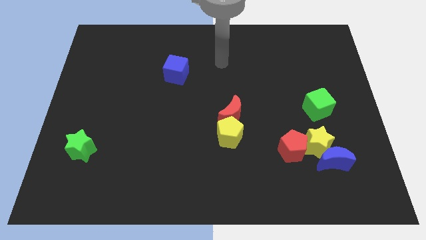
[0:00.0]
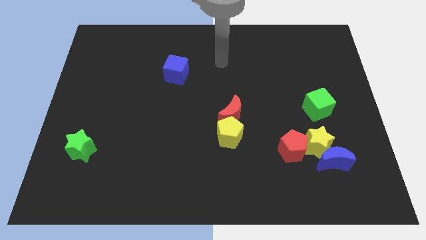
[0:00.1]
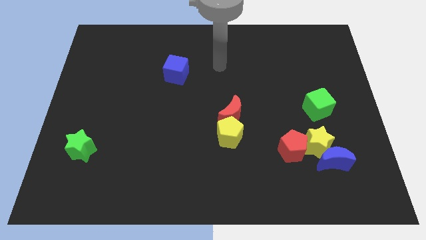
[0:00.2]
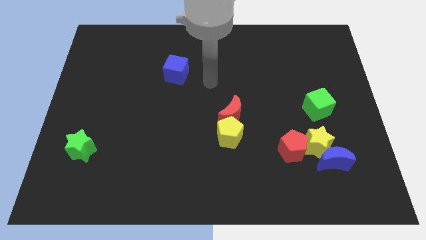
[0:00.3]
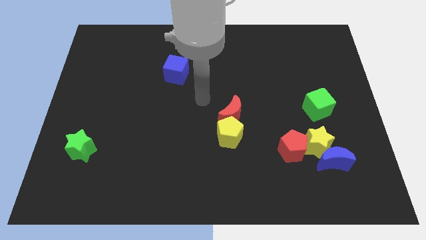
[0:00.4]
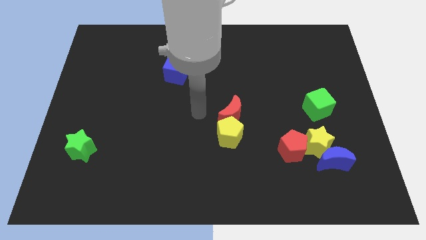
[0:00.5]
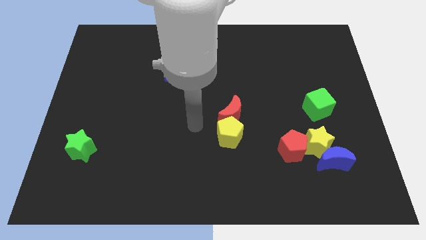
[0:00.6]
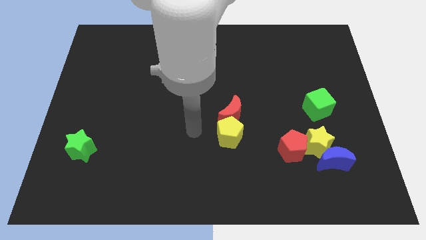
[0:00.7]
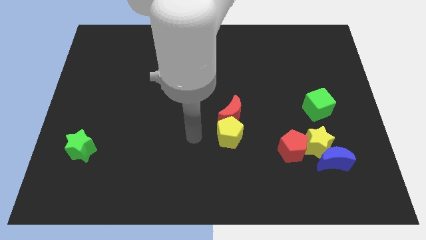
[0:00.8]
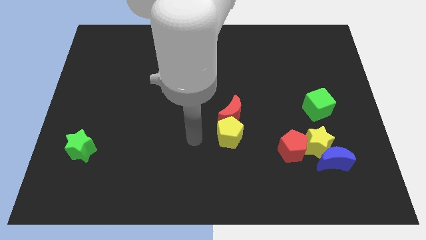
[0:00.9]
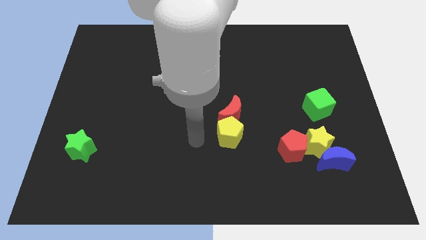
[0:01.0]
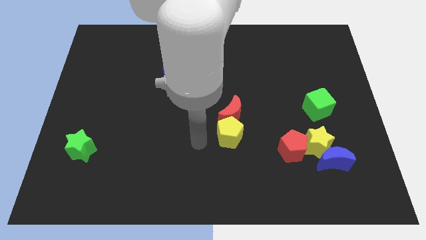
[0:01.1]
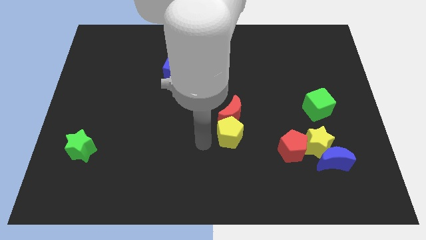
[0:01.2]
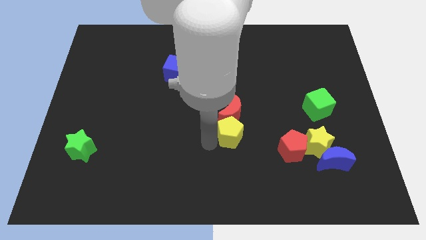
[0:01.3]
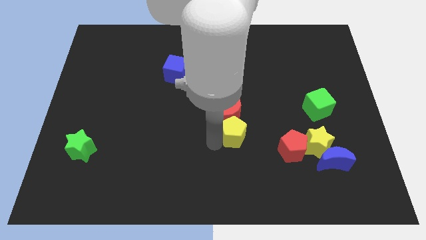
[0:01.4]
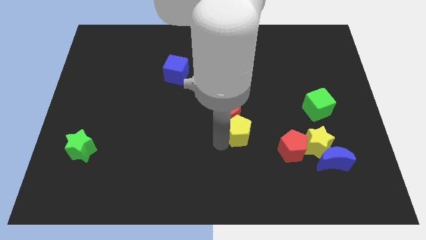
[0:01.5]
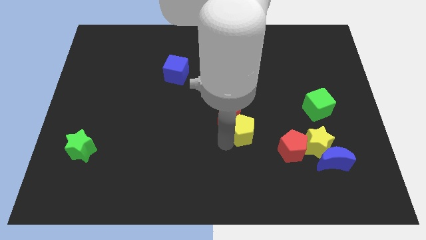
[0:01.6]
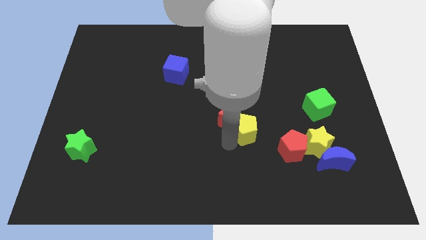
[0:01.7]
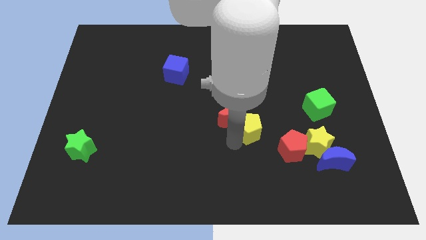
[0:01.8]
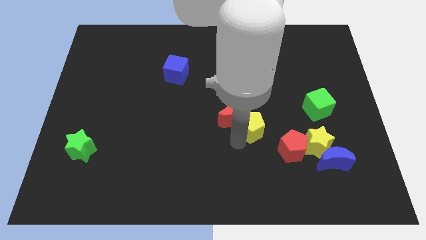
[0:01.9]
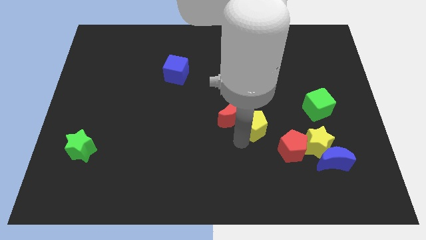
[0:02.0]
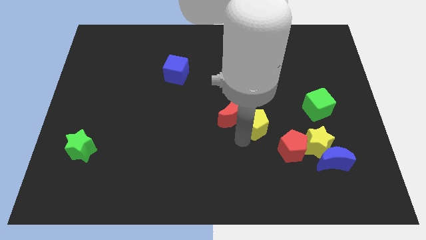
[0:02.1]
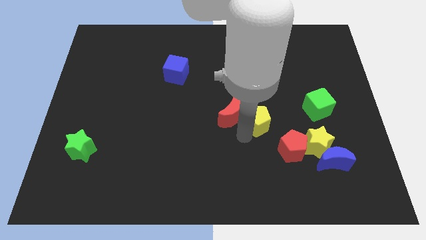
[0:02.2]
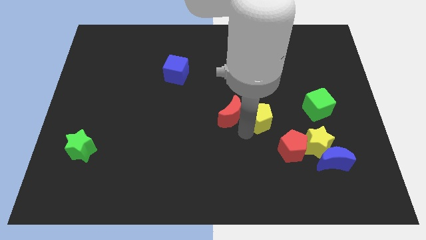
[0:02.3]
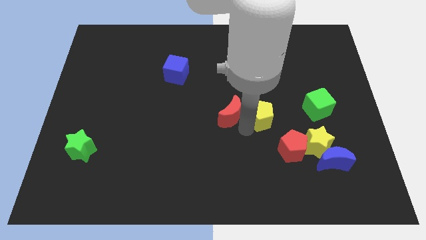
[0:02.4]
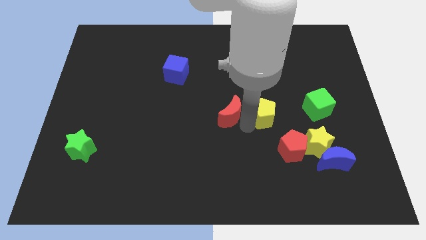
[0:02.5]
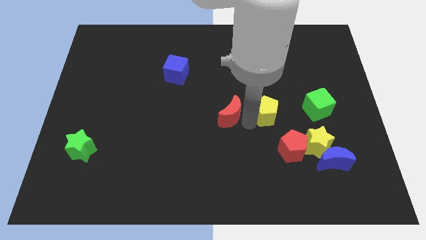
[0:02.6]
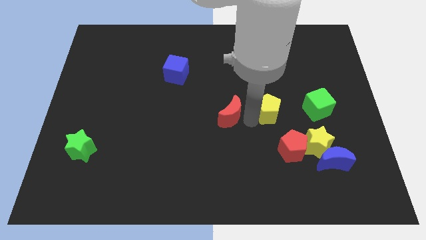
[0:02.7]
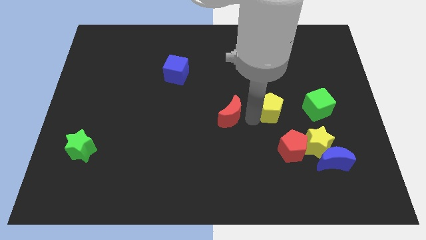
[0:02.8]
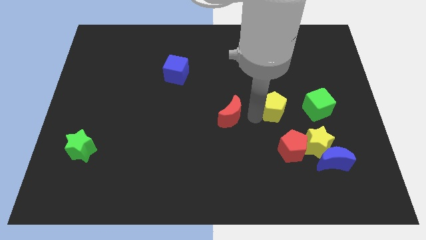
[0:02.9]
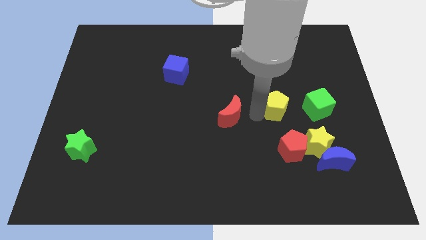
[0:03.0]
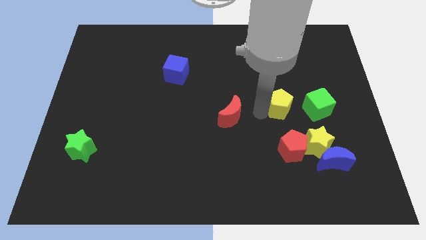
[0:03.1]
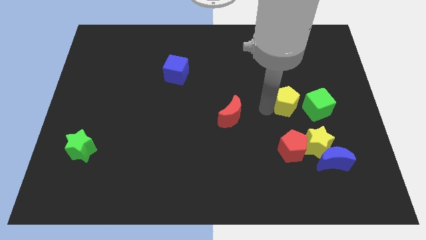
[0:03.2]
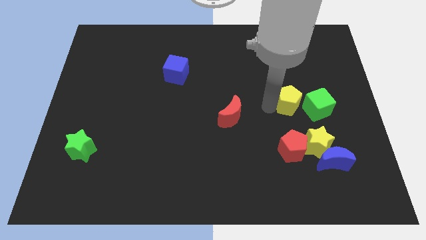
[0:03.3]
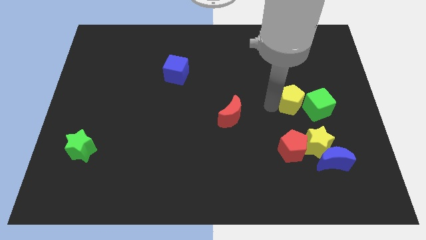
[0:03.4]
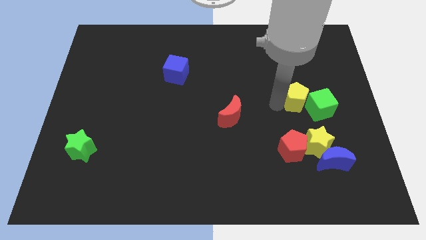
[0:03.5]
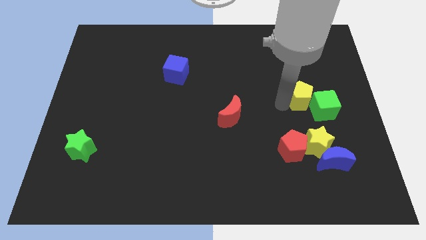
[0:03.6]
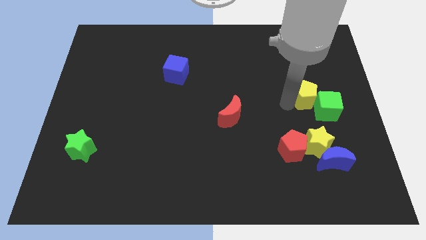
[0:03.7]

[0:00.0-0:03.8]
push the yellow pentagon towards the green cube

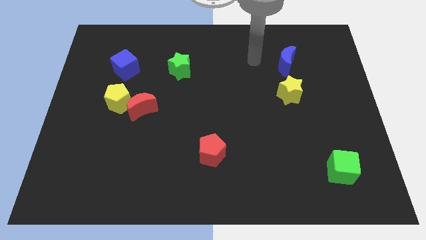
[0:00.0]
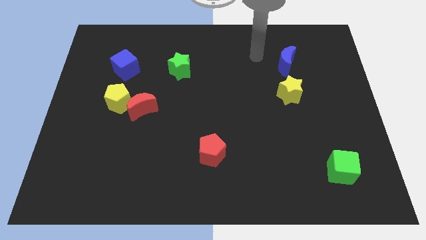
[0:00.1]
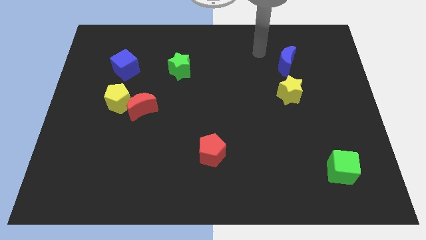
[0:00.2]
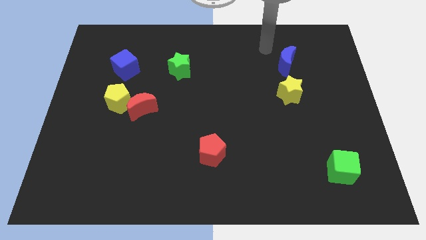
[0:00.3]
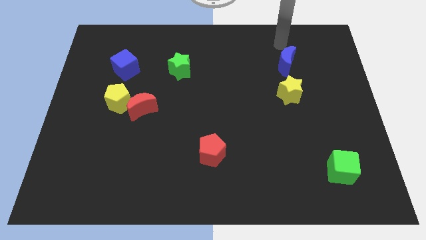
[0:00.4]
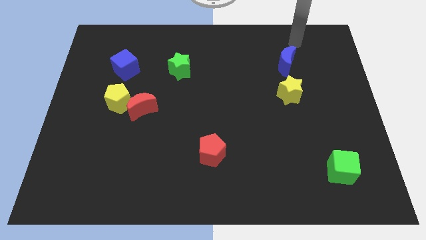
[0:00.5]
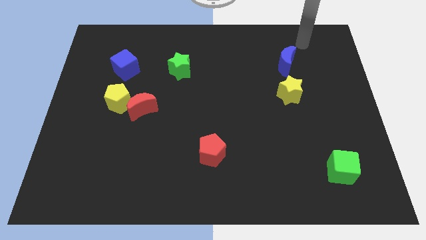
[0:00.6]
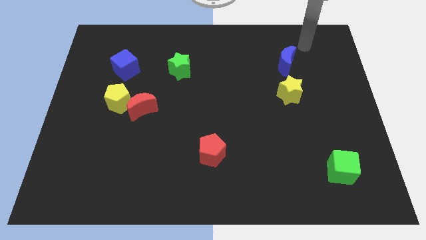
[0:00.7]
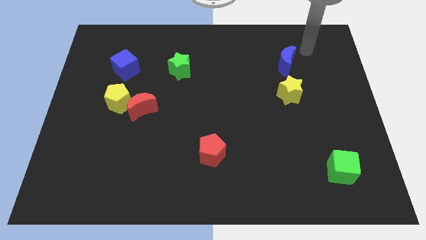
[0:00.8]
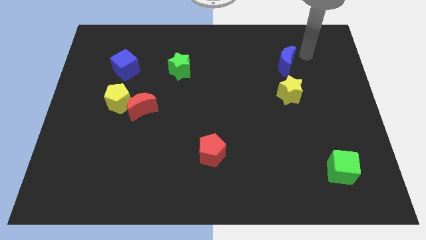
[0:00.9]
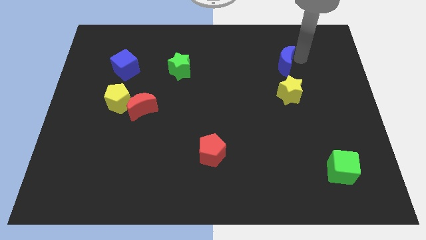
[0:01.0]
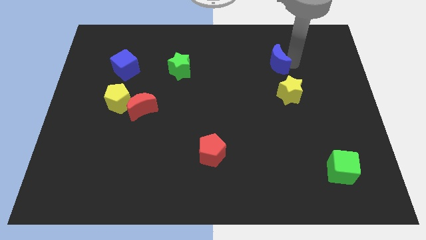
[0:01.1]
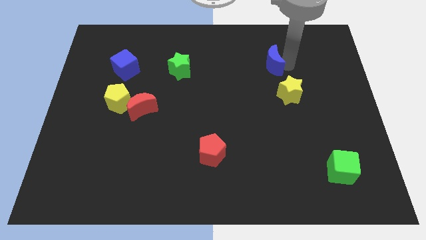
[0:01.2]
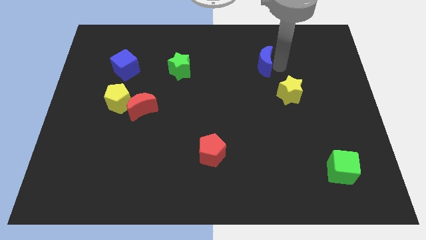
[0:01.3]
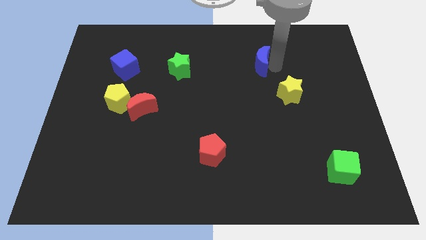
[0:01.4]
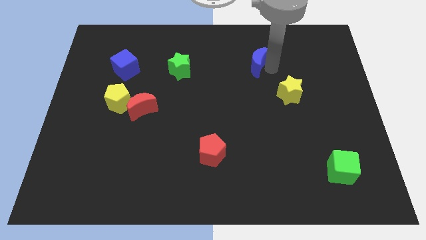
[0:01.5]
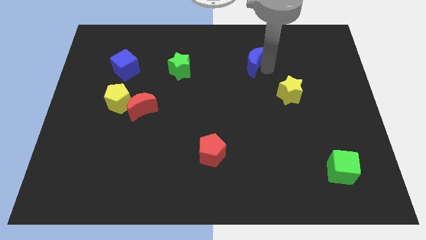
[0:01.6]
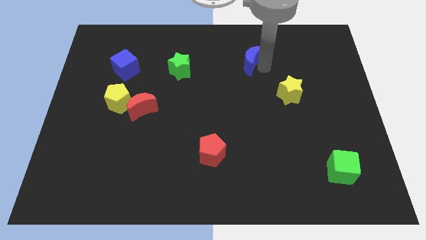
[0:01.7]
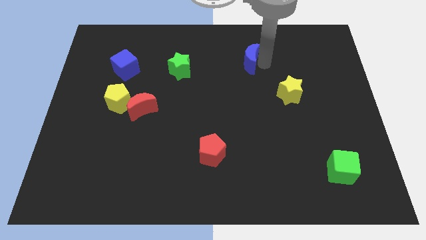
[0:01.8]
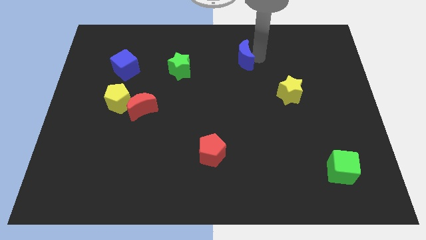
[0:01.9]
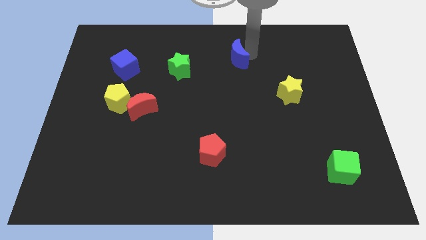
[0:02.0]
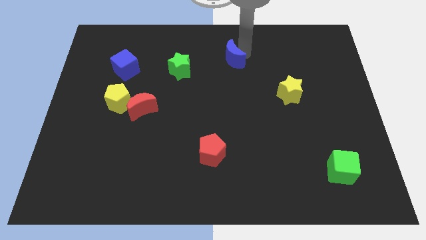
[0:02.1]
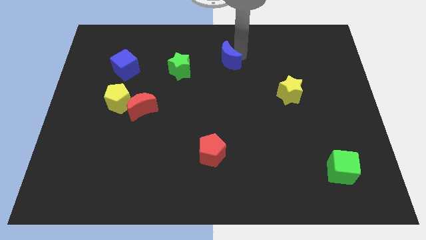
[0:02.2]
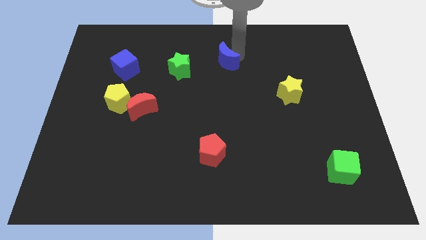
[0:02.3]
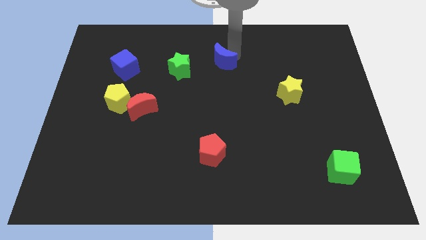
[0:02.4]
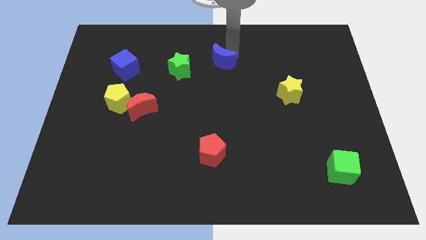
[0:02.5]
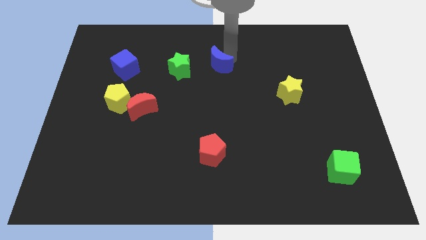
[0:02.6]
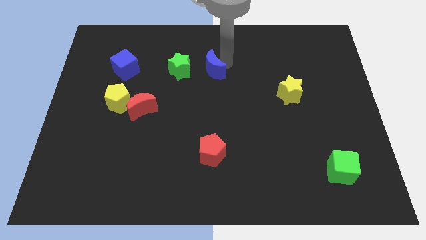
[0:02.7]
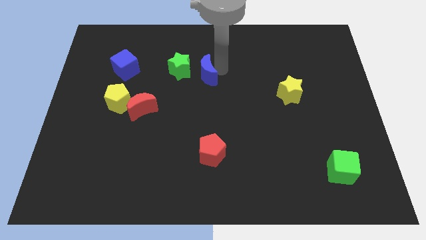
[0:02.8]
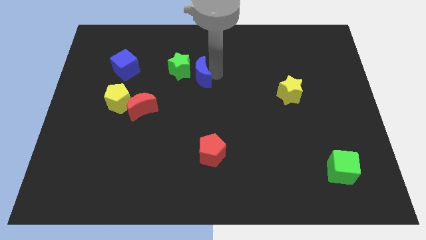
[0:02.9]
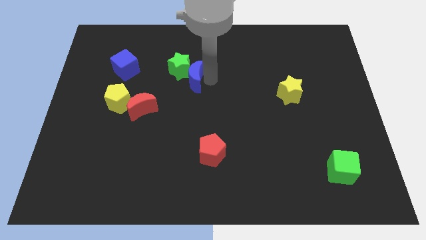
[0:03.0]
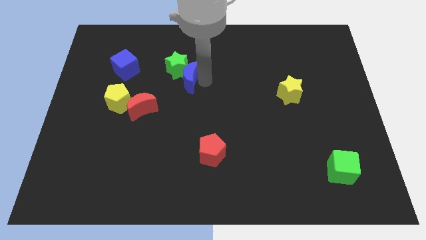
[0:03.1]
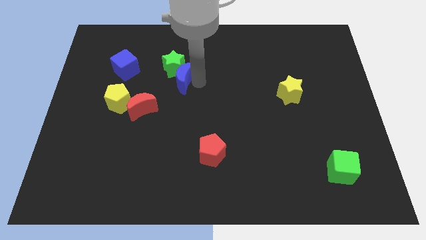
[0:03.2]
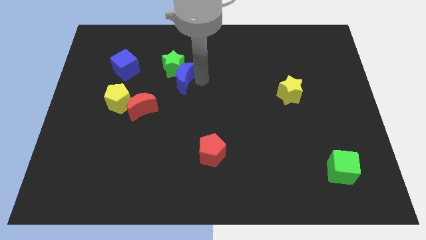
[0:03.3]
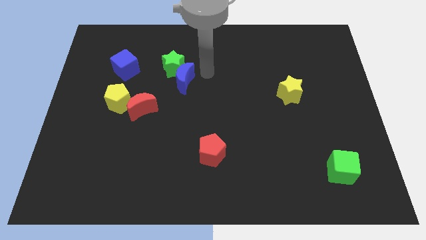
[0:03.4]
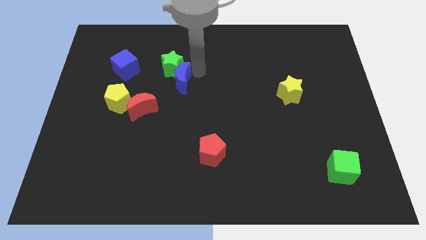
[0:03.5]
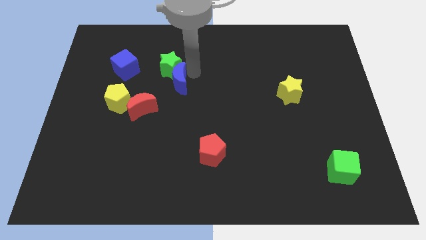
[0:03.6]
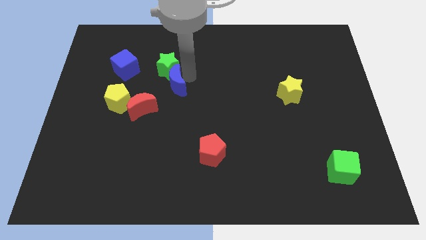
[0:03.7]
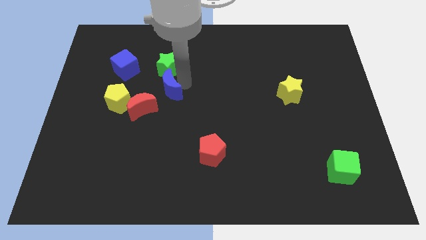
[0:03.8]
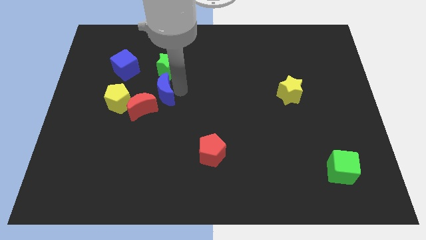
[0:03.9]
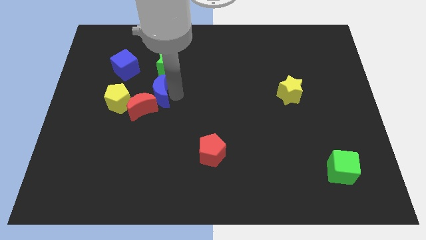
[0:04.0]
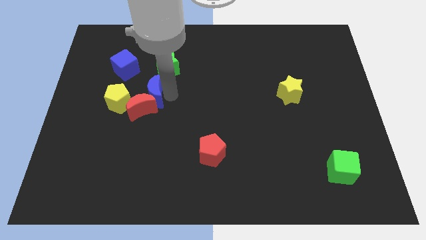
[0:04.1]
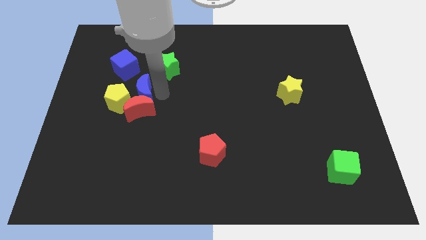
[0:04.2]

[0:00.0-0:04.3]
put the blue moon to the red moon
